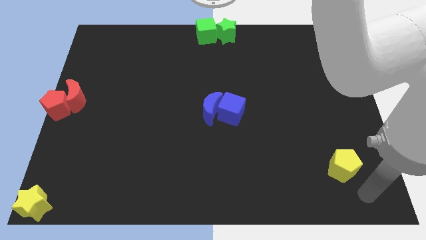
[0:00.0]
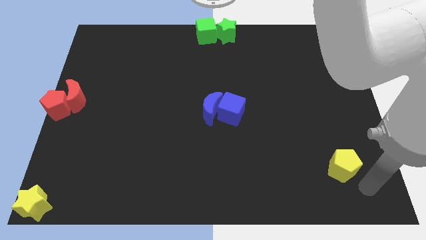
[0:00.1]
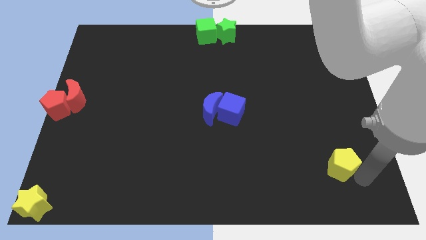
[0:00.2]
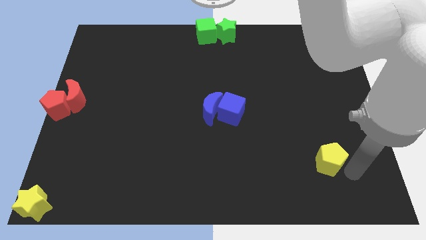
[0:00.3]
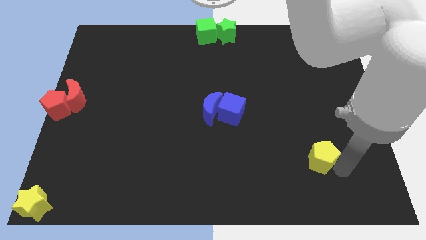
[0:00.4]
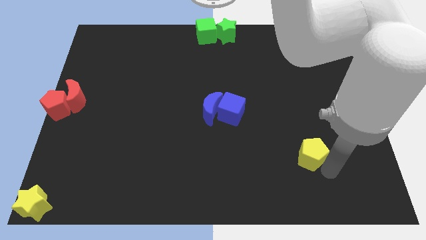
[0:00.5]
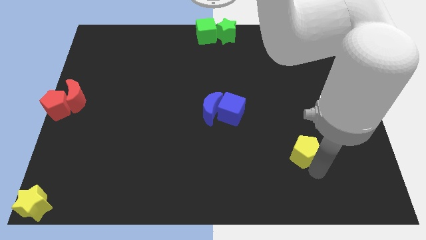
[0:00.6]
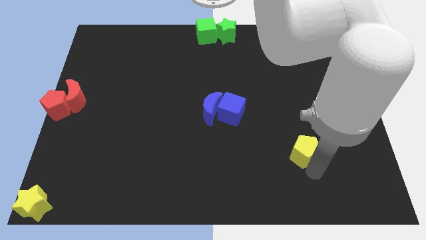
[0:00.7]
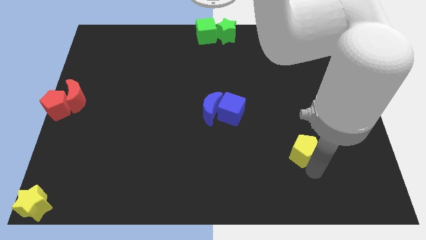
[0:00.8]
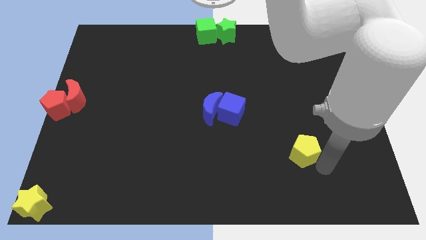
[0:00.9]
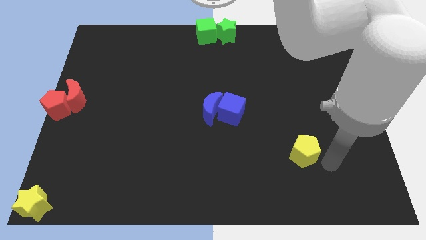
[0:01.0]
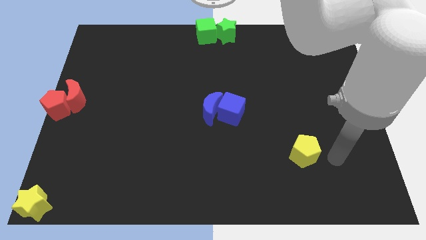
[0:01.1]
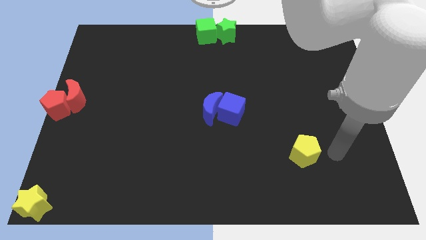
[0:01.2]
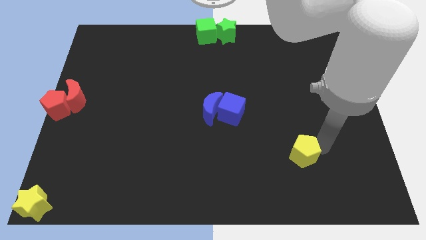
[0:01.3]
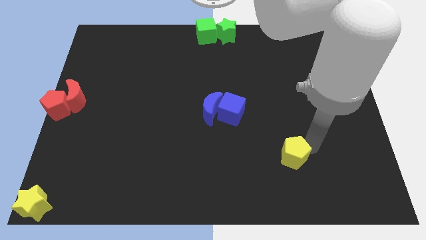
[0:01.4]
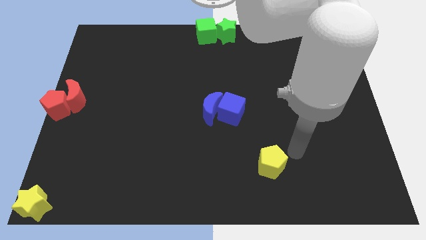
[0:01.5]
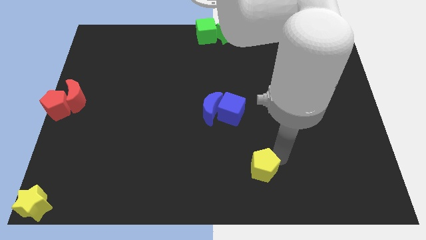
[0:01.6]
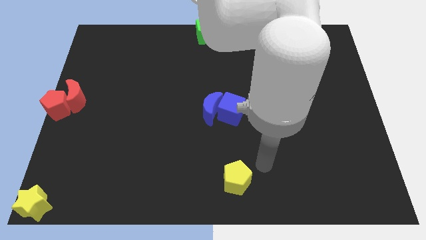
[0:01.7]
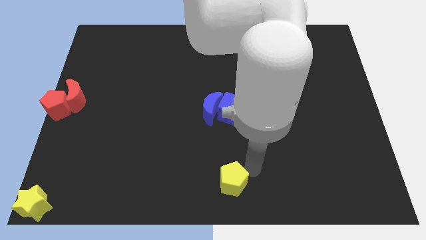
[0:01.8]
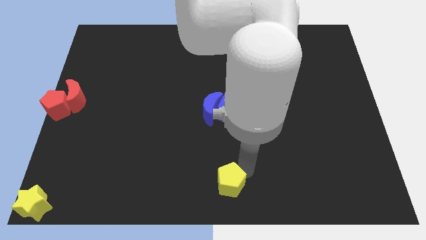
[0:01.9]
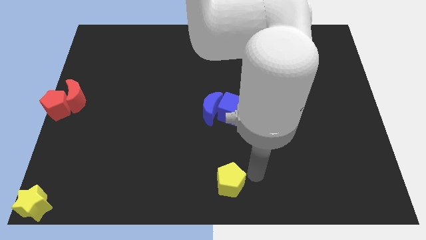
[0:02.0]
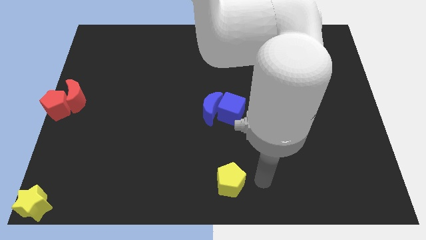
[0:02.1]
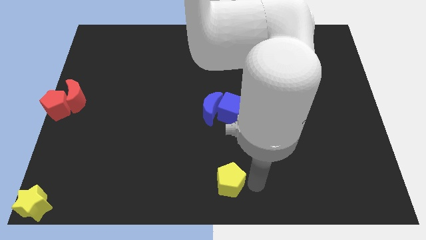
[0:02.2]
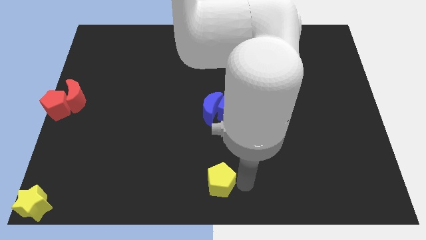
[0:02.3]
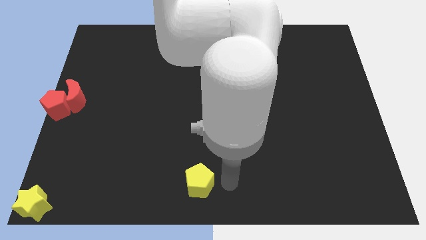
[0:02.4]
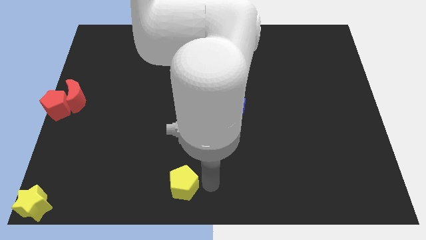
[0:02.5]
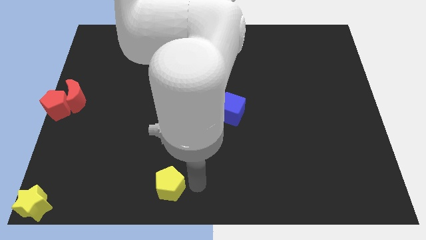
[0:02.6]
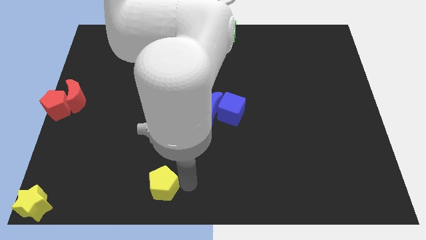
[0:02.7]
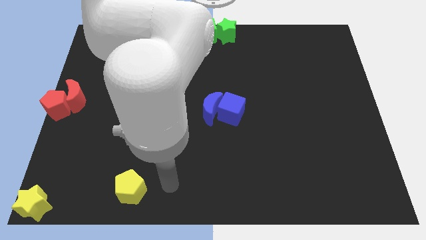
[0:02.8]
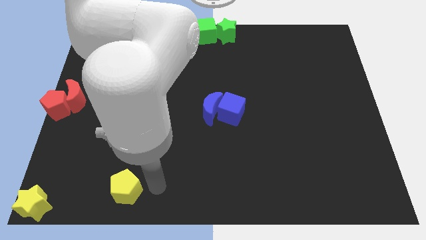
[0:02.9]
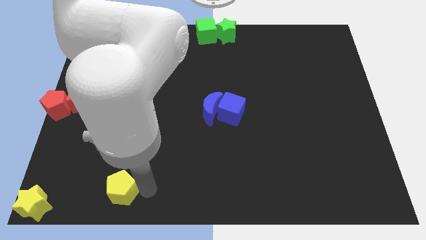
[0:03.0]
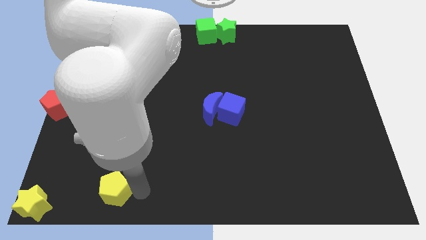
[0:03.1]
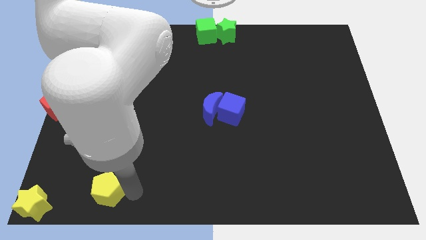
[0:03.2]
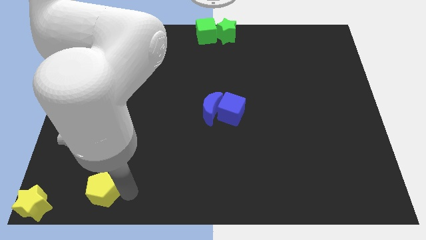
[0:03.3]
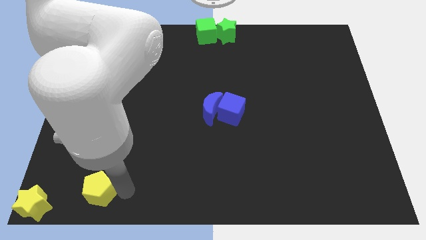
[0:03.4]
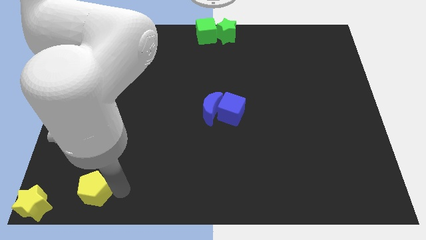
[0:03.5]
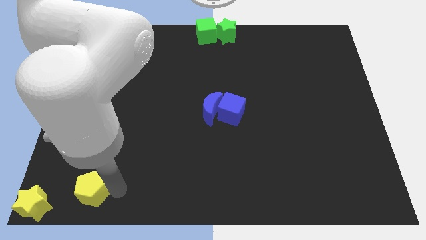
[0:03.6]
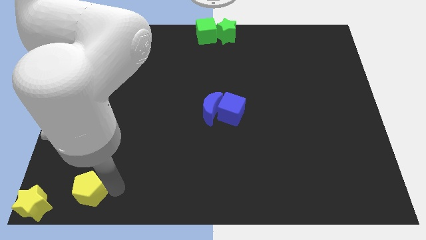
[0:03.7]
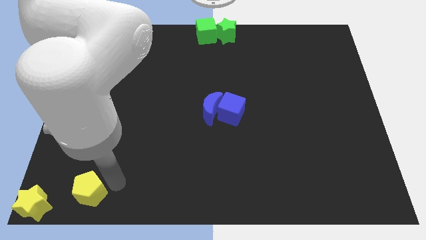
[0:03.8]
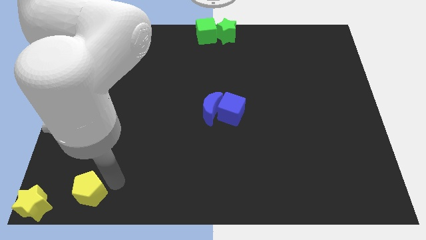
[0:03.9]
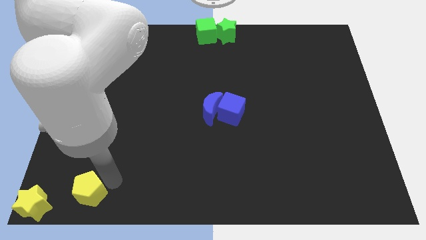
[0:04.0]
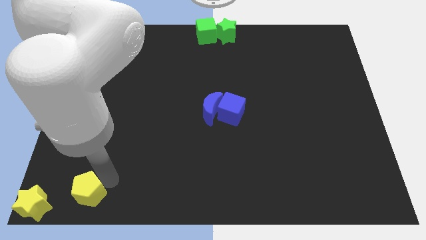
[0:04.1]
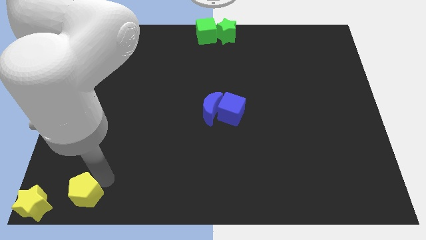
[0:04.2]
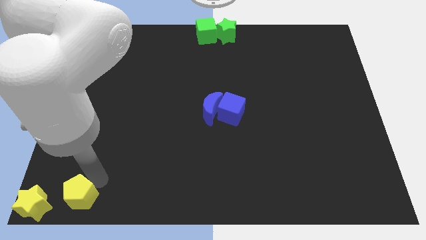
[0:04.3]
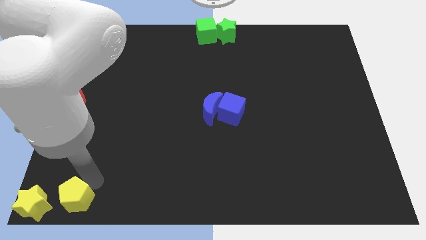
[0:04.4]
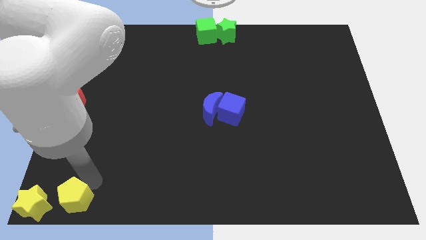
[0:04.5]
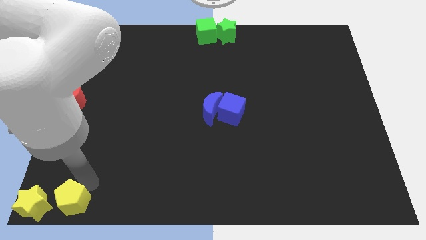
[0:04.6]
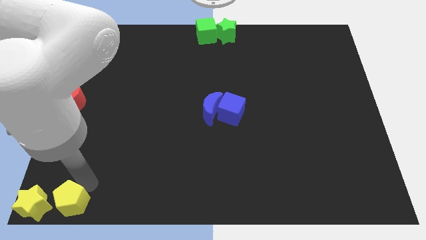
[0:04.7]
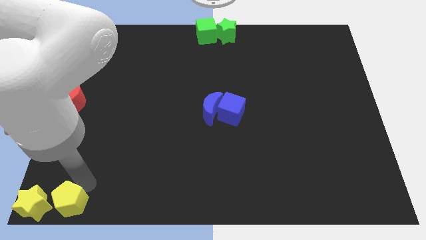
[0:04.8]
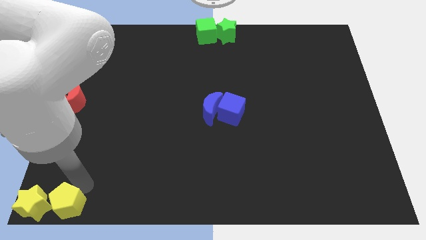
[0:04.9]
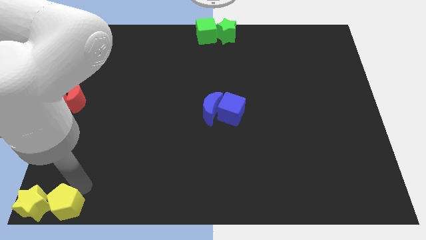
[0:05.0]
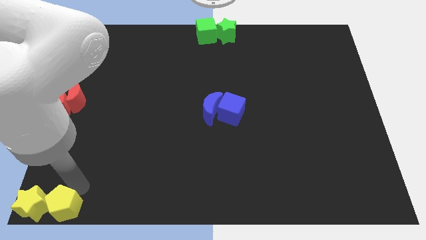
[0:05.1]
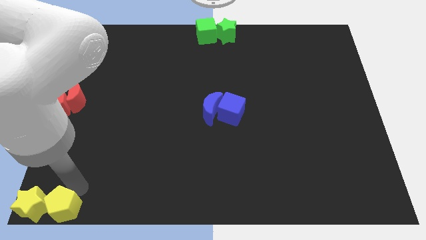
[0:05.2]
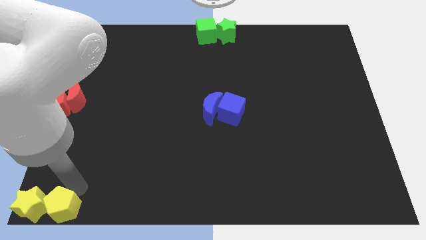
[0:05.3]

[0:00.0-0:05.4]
place the yellow pentagon right to the yellow star

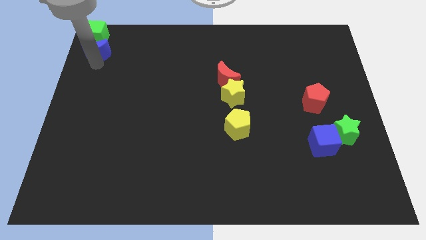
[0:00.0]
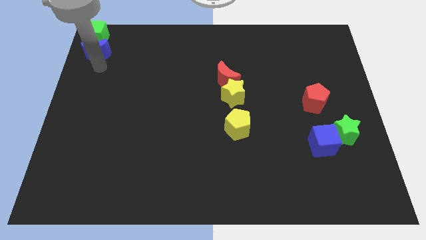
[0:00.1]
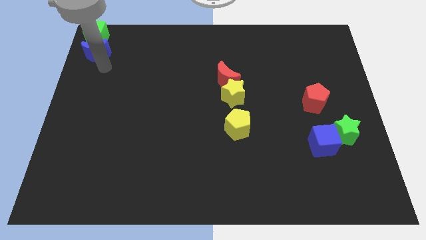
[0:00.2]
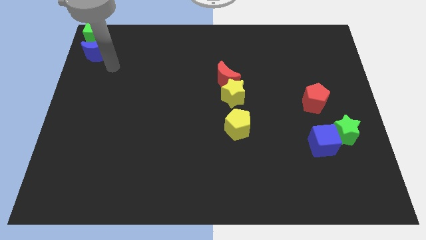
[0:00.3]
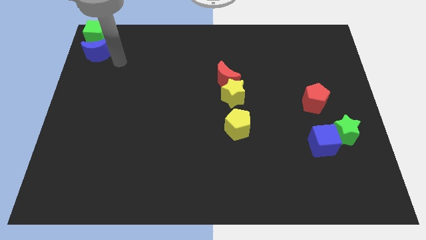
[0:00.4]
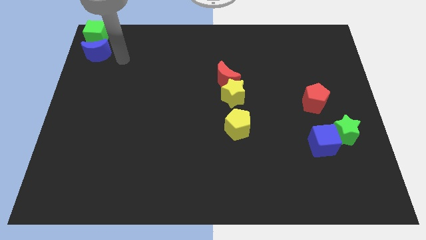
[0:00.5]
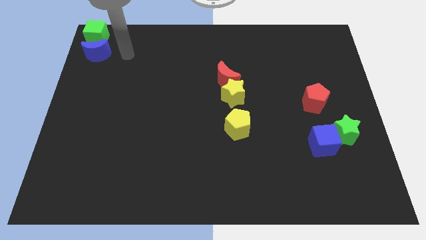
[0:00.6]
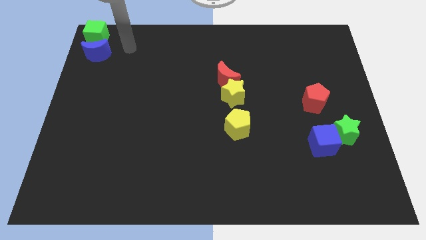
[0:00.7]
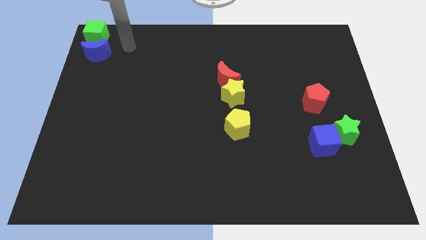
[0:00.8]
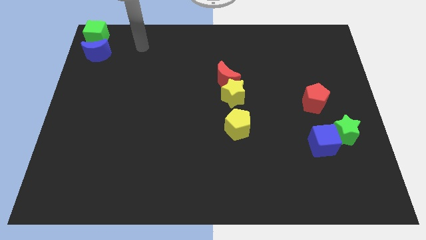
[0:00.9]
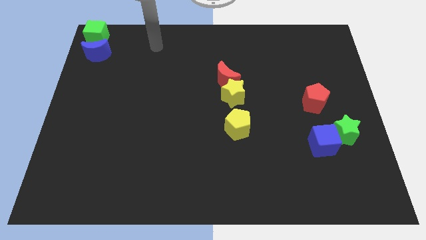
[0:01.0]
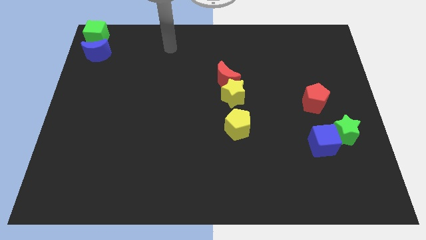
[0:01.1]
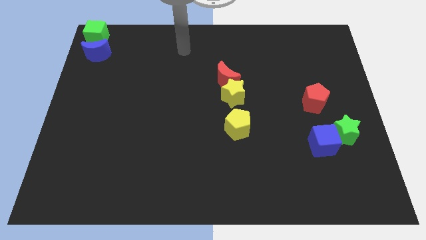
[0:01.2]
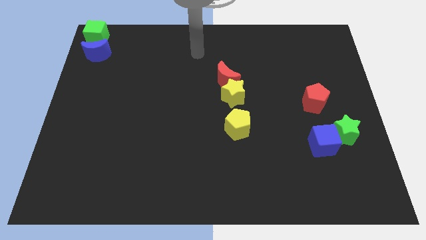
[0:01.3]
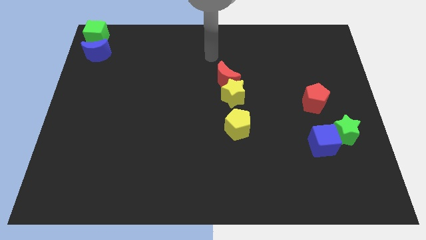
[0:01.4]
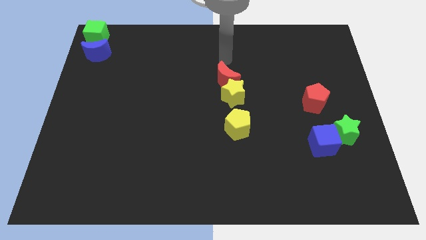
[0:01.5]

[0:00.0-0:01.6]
place your hand above the red moon

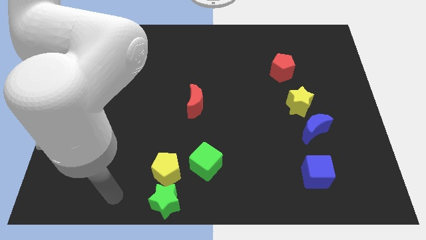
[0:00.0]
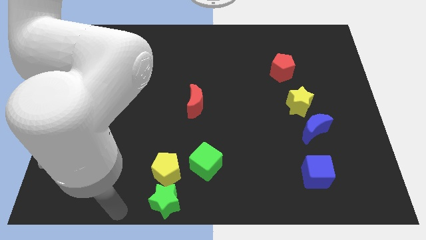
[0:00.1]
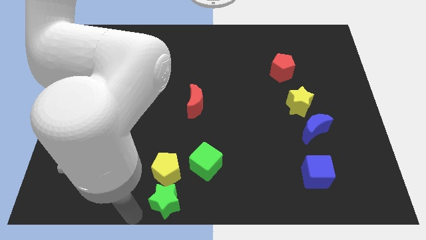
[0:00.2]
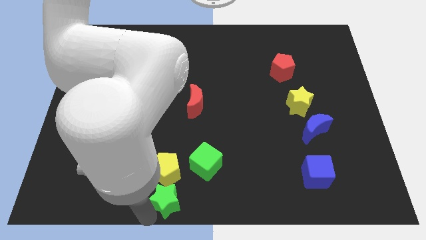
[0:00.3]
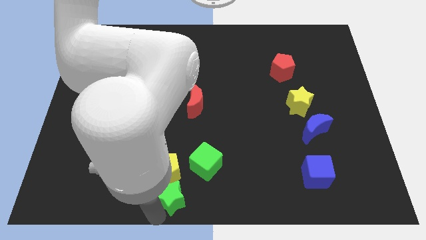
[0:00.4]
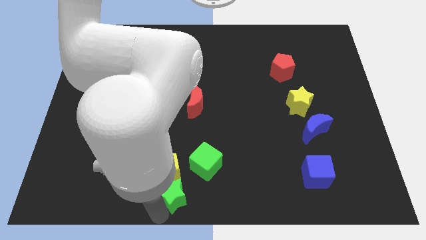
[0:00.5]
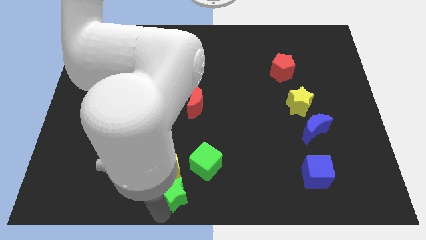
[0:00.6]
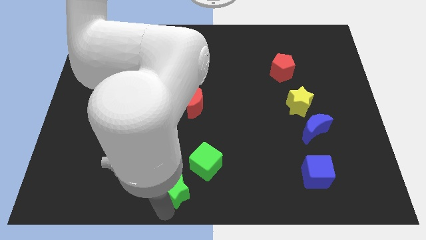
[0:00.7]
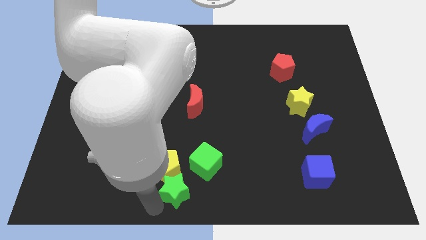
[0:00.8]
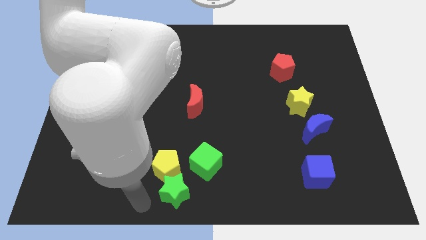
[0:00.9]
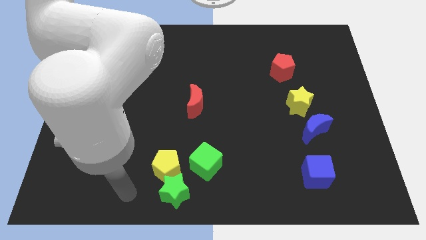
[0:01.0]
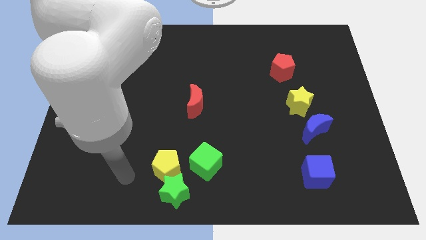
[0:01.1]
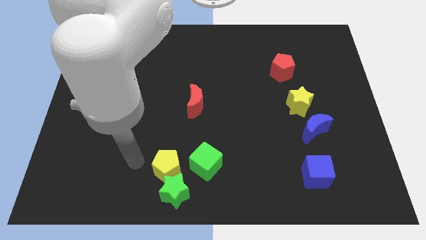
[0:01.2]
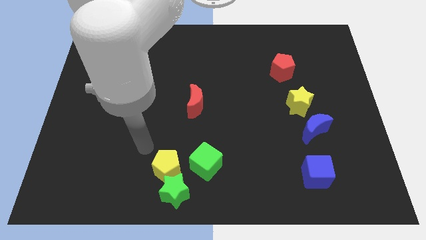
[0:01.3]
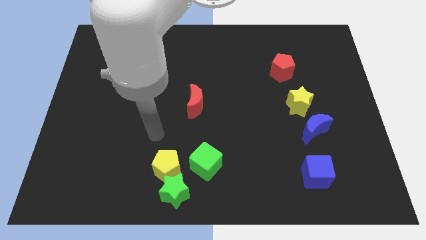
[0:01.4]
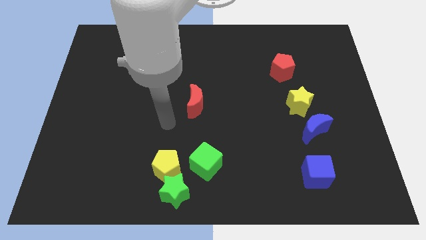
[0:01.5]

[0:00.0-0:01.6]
slightly move green star into the yellow pentagon

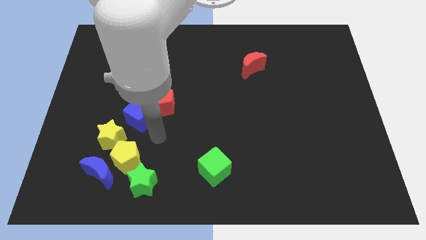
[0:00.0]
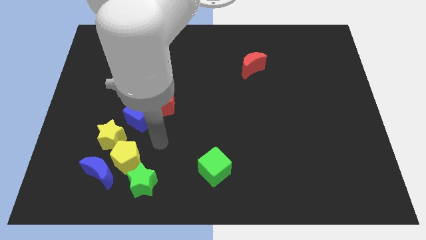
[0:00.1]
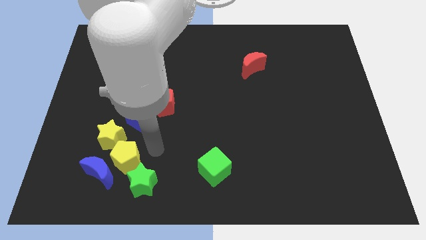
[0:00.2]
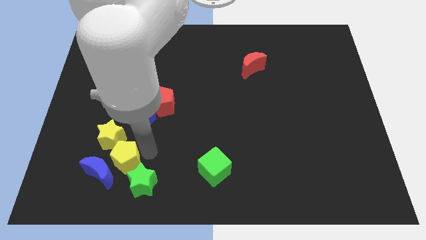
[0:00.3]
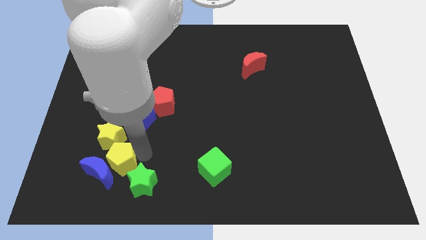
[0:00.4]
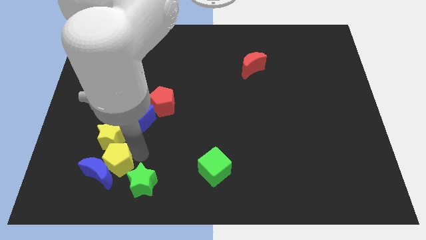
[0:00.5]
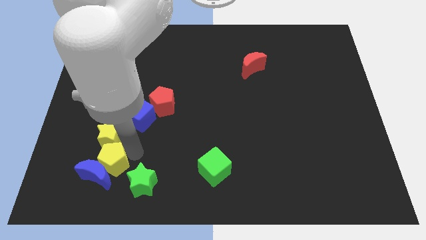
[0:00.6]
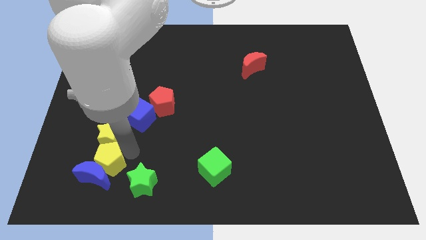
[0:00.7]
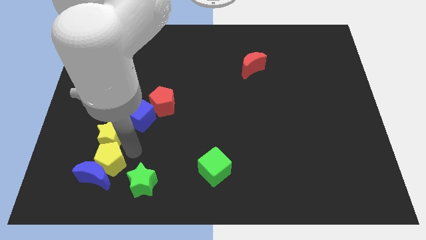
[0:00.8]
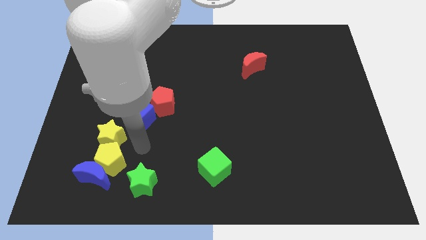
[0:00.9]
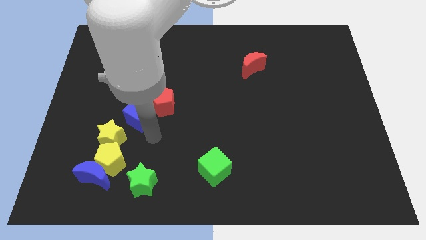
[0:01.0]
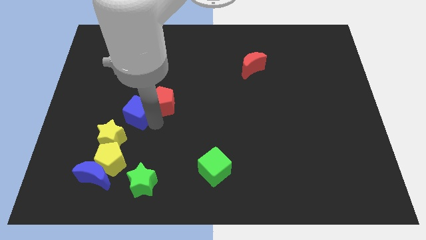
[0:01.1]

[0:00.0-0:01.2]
make the yellow pentagon to touch the top side of the blue crescent
